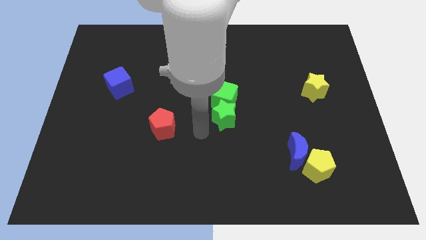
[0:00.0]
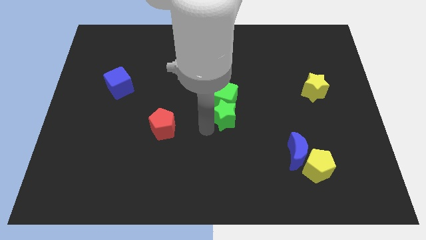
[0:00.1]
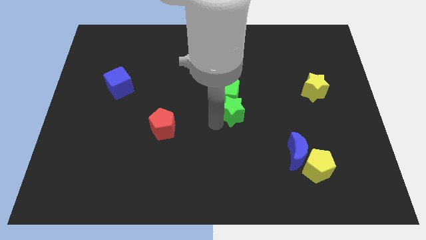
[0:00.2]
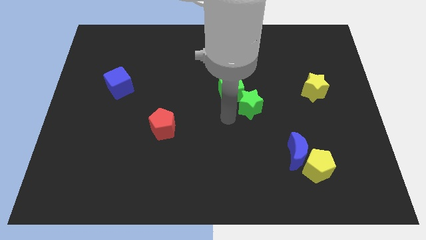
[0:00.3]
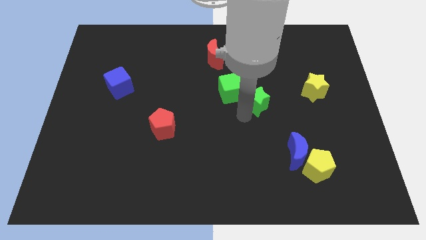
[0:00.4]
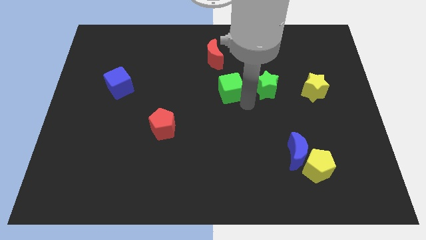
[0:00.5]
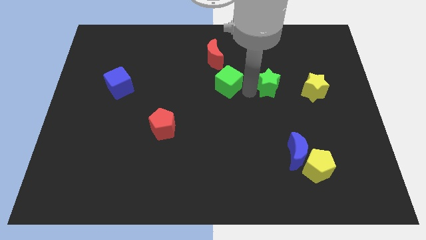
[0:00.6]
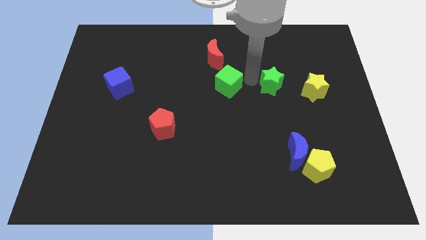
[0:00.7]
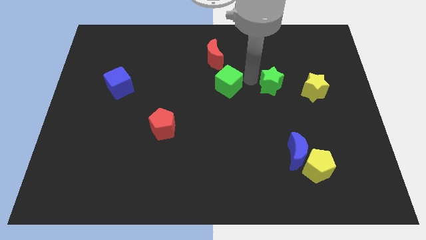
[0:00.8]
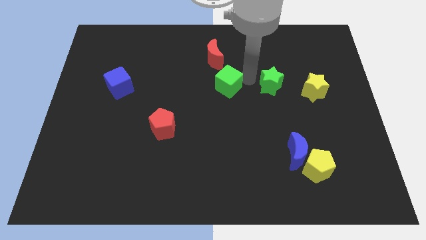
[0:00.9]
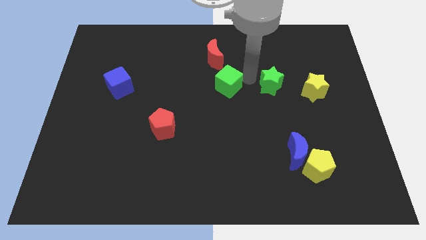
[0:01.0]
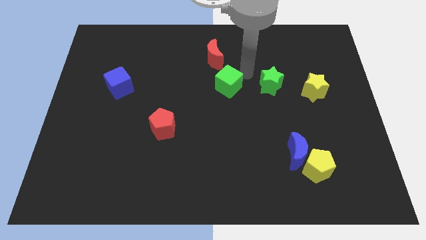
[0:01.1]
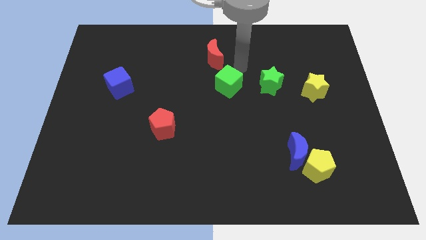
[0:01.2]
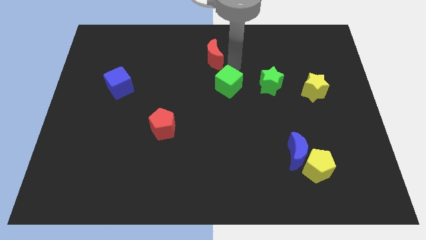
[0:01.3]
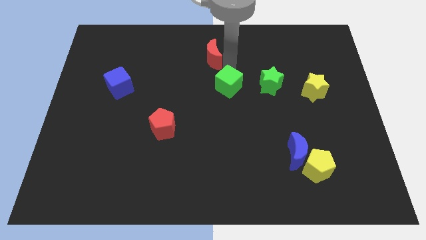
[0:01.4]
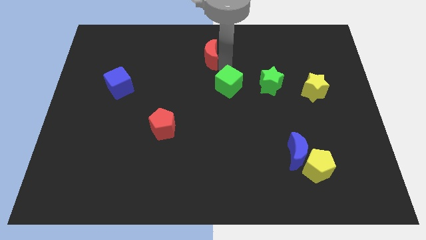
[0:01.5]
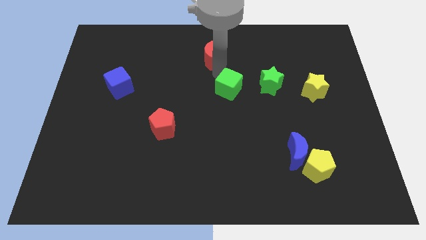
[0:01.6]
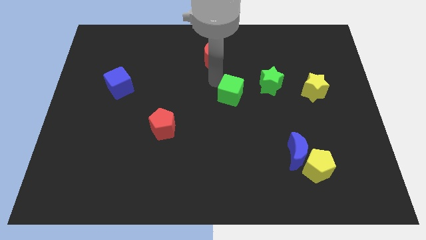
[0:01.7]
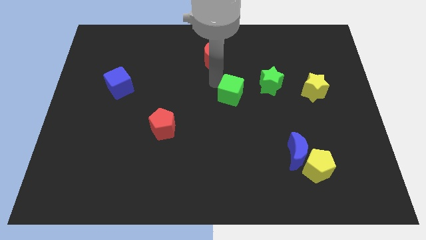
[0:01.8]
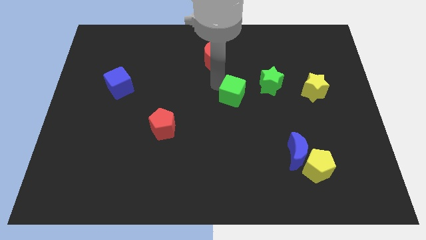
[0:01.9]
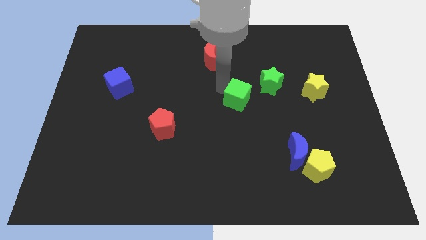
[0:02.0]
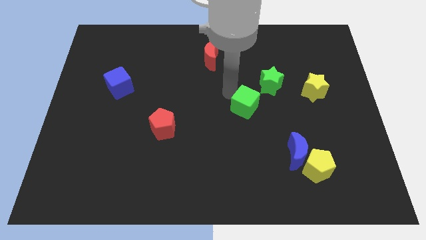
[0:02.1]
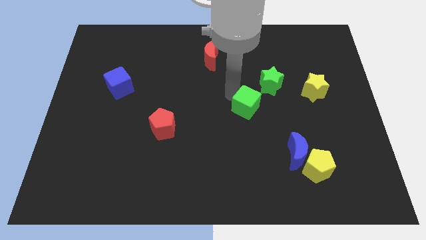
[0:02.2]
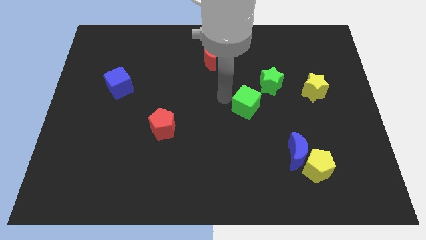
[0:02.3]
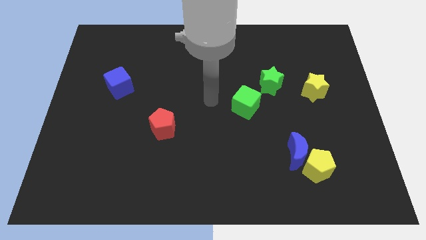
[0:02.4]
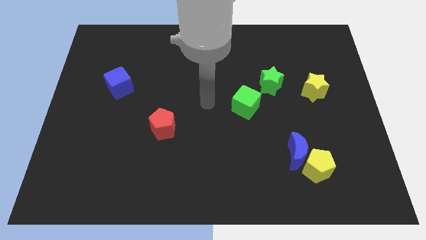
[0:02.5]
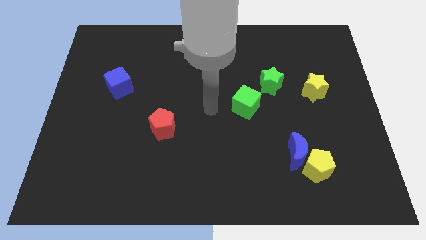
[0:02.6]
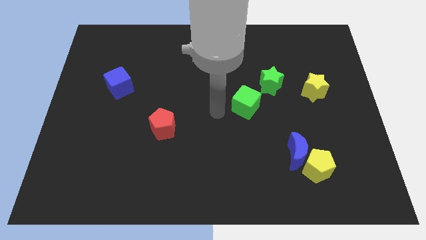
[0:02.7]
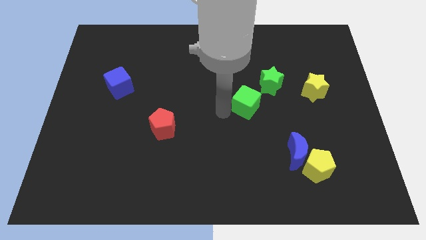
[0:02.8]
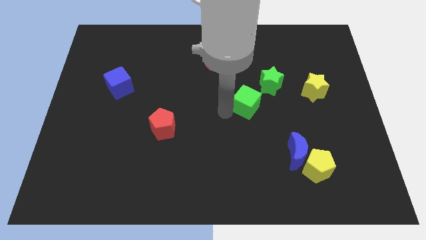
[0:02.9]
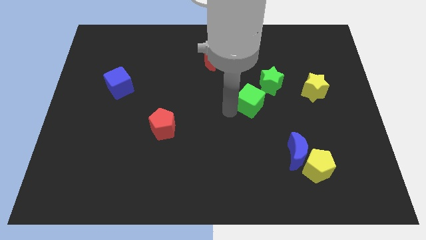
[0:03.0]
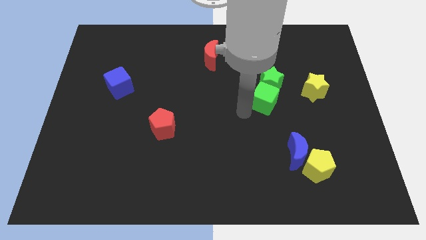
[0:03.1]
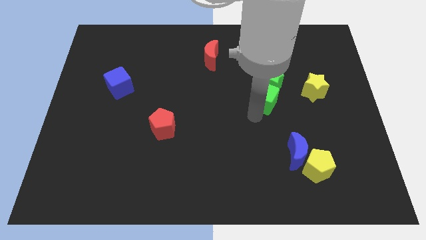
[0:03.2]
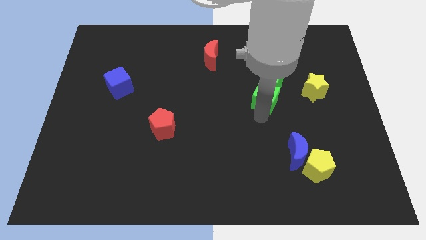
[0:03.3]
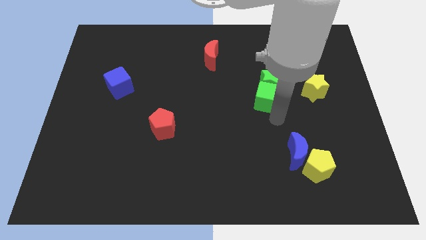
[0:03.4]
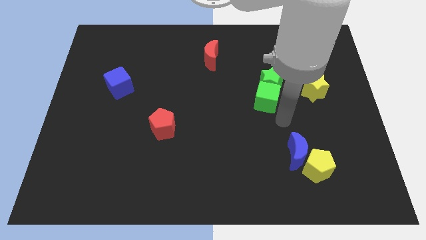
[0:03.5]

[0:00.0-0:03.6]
move the green cube to the bottom side of the green star

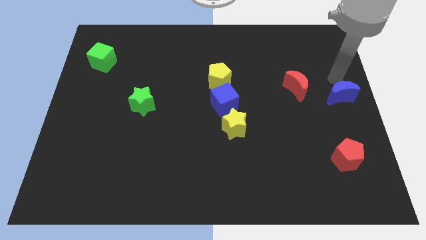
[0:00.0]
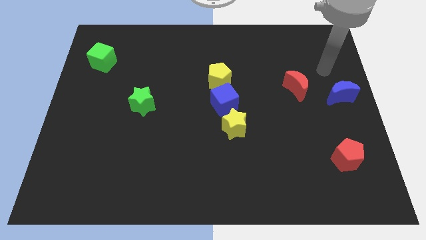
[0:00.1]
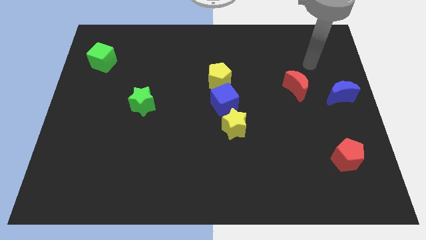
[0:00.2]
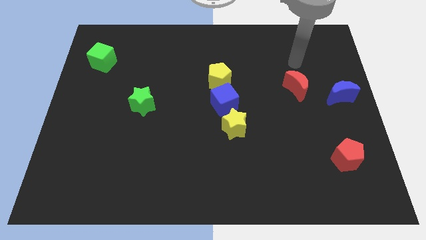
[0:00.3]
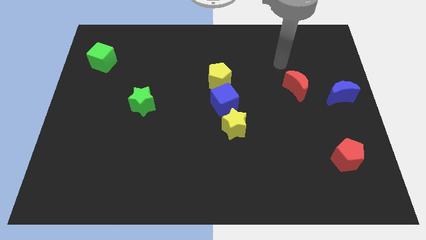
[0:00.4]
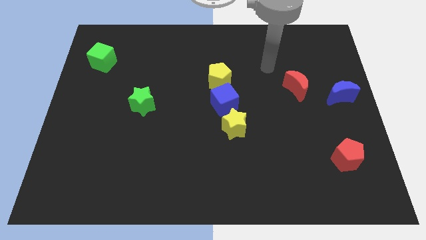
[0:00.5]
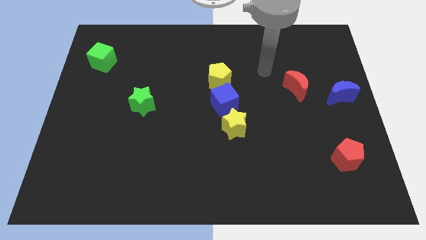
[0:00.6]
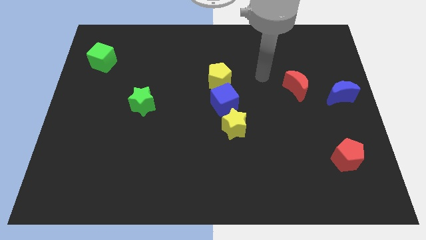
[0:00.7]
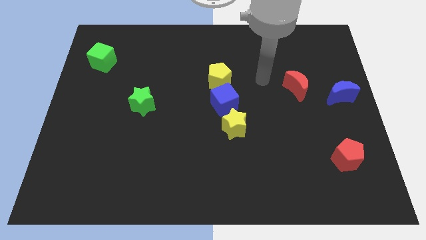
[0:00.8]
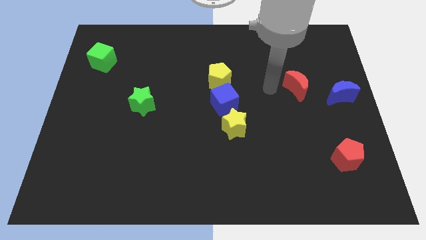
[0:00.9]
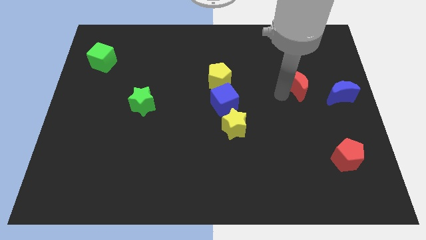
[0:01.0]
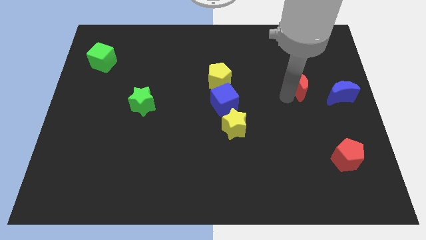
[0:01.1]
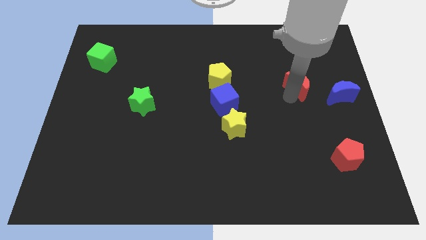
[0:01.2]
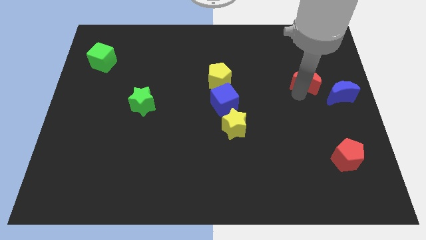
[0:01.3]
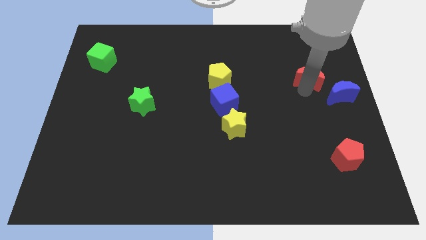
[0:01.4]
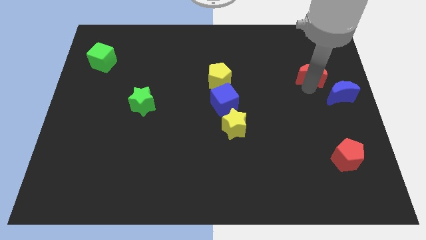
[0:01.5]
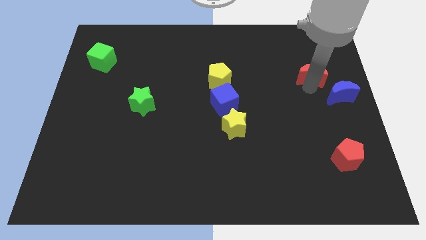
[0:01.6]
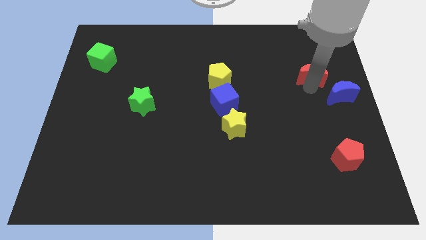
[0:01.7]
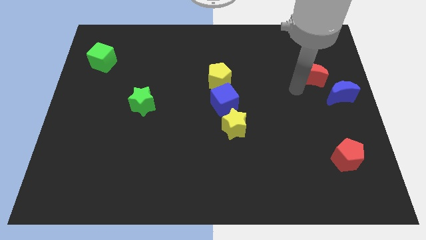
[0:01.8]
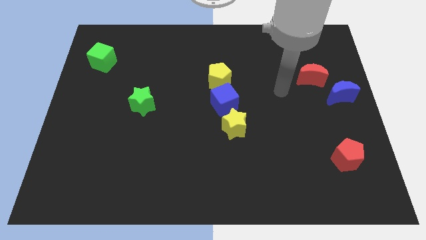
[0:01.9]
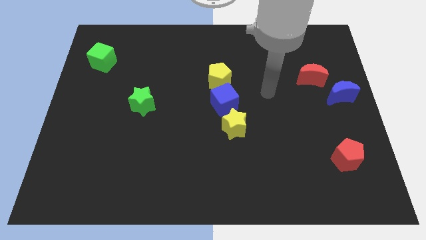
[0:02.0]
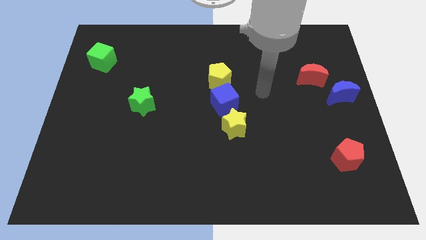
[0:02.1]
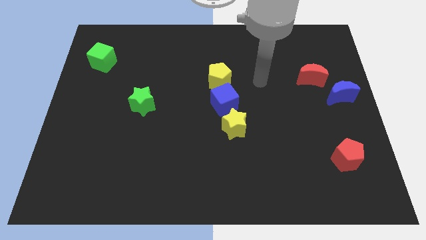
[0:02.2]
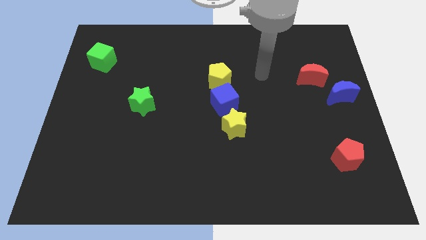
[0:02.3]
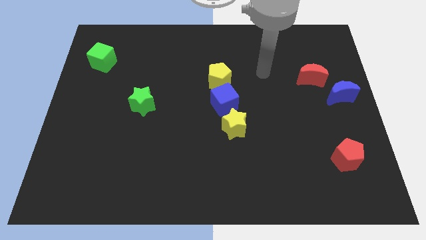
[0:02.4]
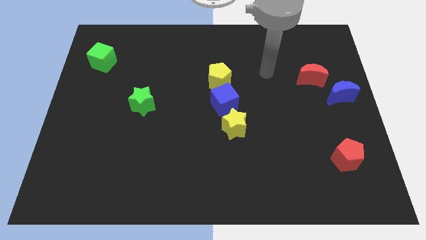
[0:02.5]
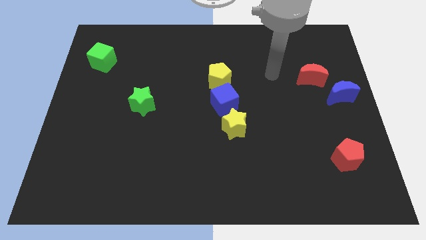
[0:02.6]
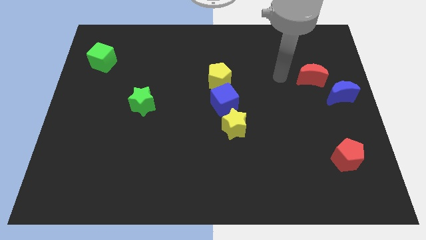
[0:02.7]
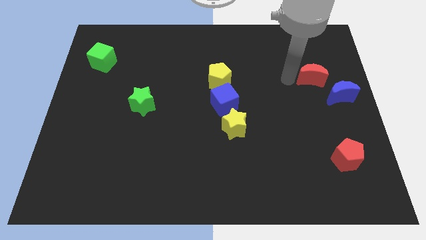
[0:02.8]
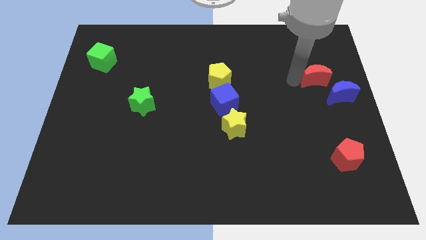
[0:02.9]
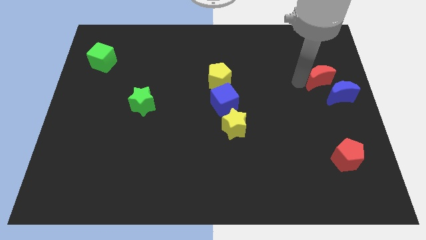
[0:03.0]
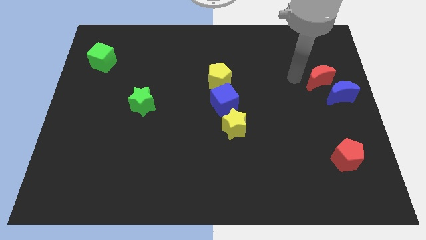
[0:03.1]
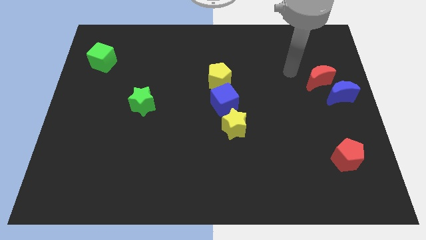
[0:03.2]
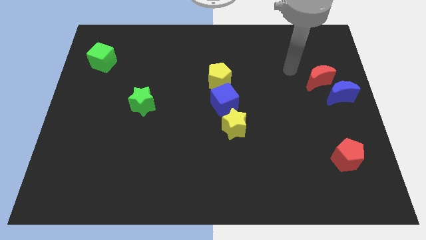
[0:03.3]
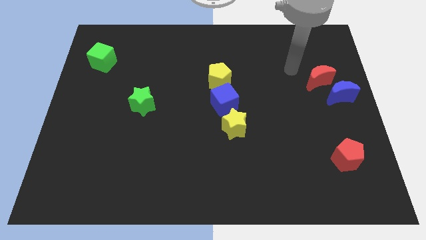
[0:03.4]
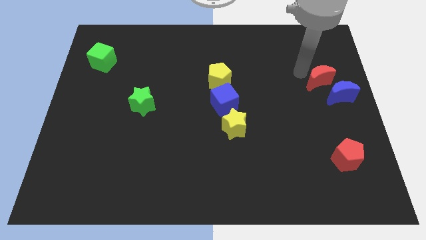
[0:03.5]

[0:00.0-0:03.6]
drag the red moon close to the top side of the blue crescent

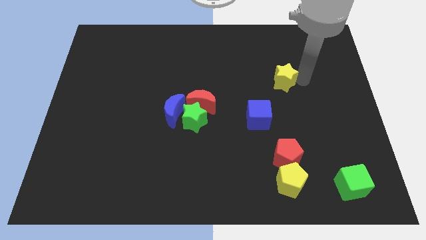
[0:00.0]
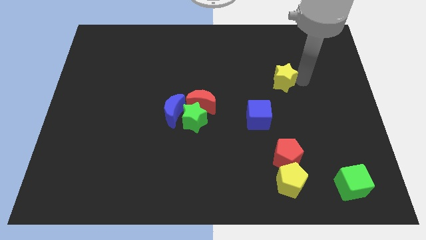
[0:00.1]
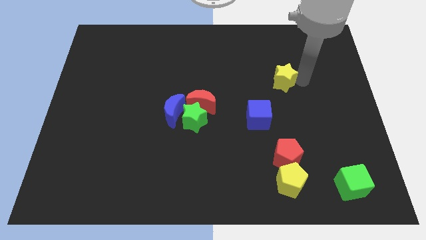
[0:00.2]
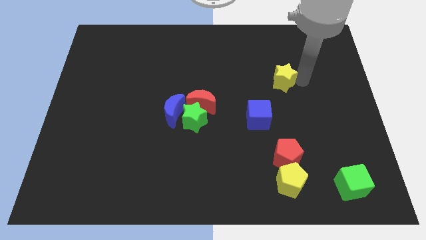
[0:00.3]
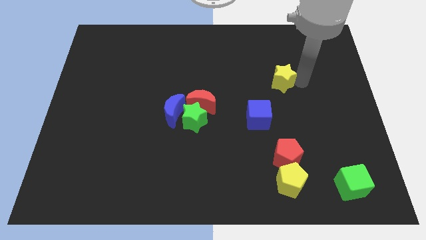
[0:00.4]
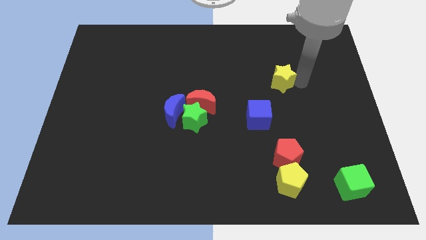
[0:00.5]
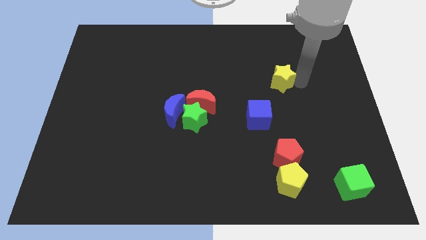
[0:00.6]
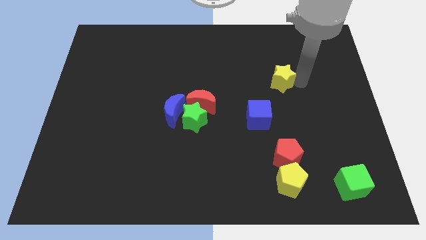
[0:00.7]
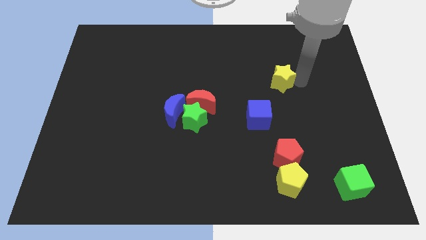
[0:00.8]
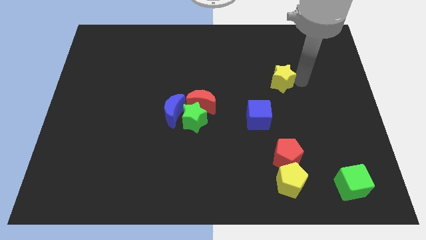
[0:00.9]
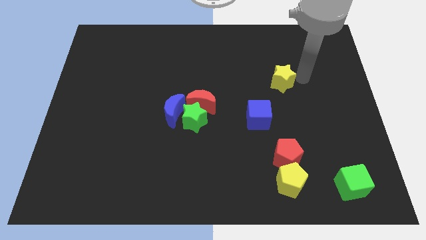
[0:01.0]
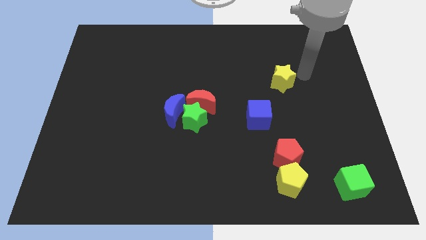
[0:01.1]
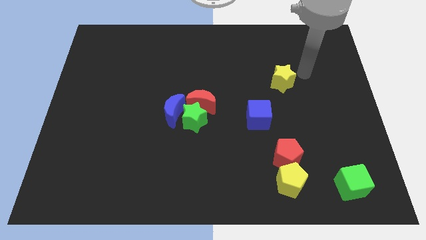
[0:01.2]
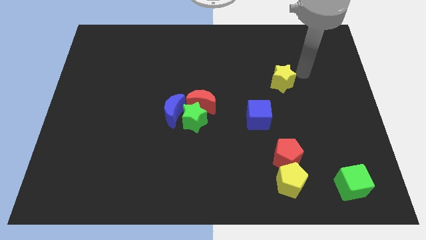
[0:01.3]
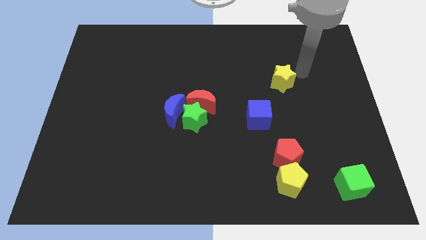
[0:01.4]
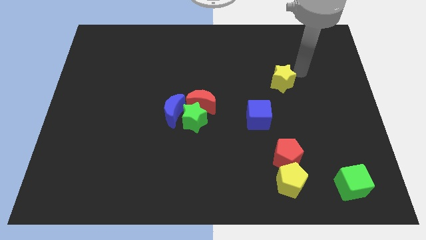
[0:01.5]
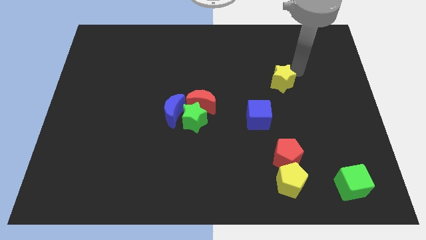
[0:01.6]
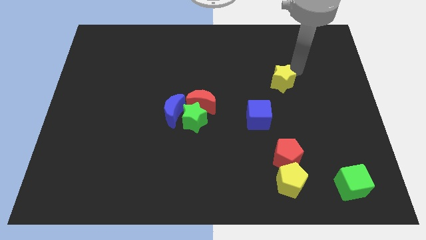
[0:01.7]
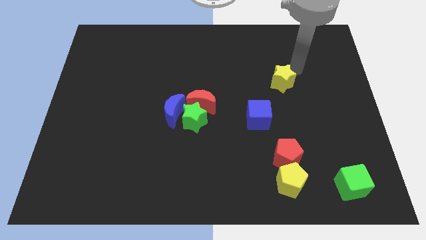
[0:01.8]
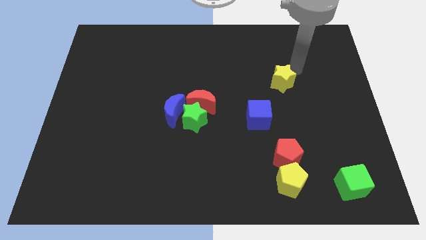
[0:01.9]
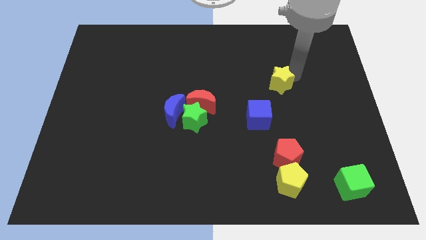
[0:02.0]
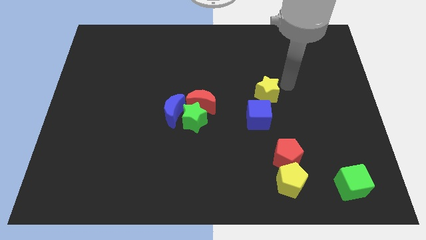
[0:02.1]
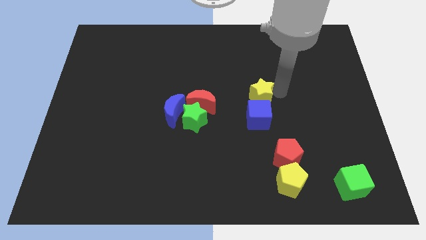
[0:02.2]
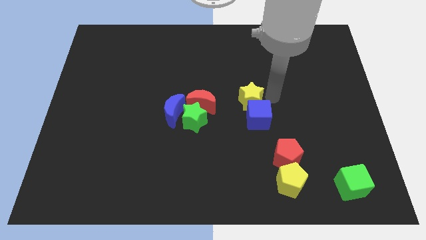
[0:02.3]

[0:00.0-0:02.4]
push the yellow star on top into blue cube
